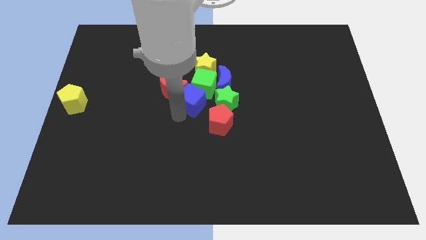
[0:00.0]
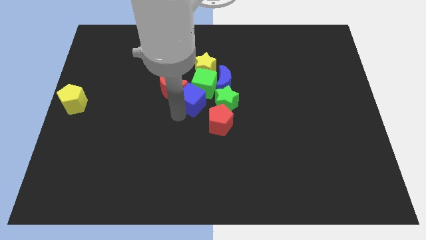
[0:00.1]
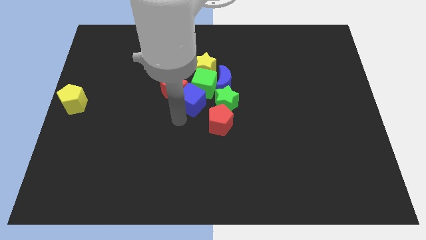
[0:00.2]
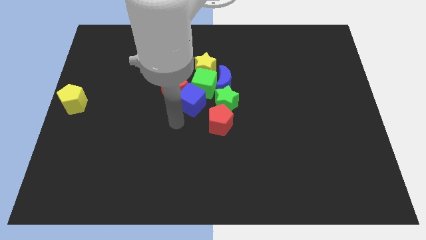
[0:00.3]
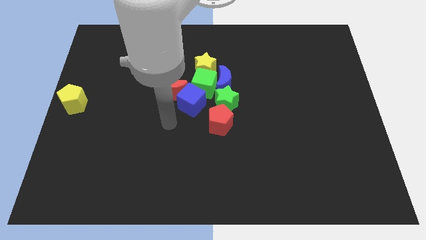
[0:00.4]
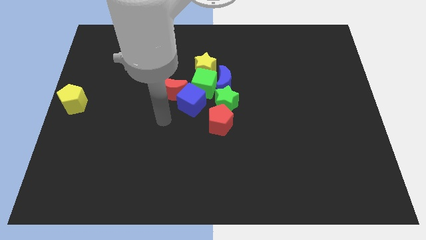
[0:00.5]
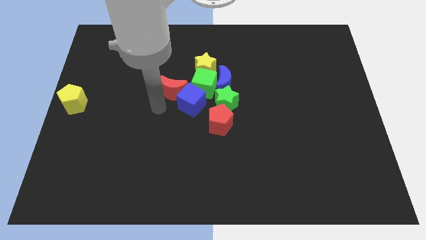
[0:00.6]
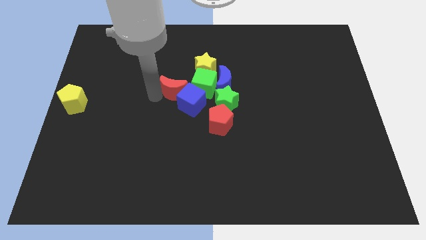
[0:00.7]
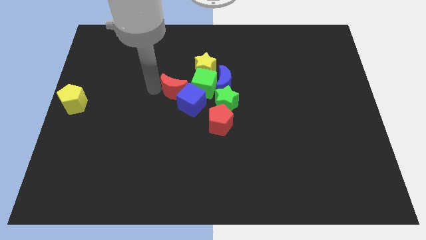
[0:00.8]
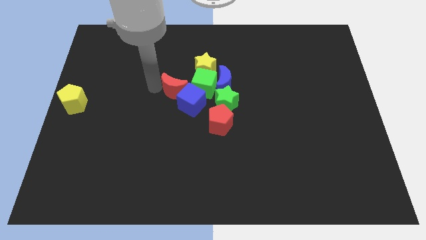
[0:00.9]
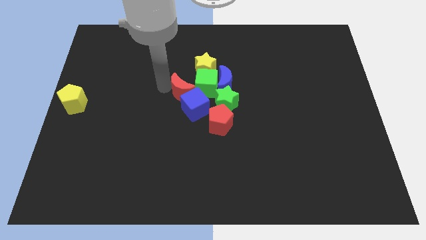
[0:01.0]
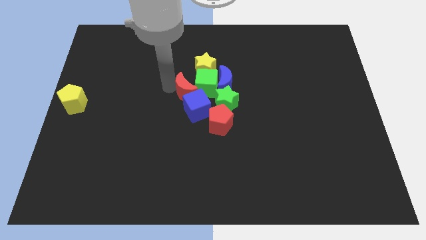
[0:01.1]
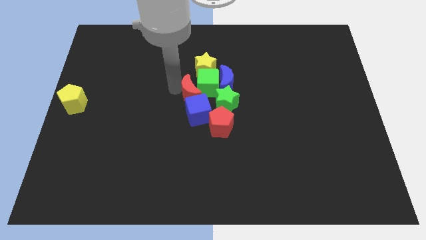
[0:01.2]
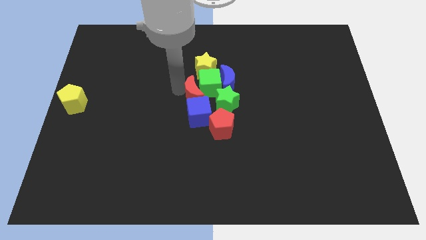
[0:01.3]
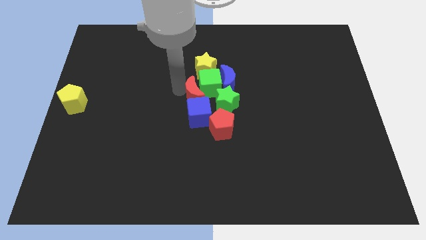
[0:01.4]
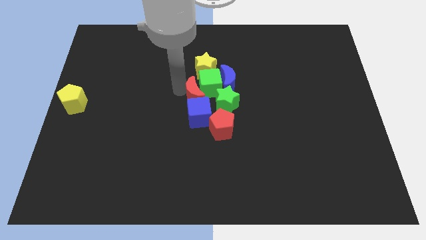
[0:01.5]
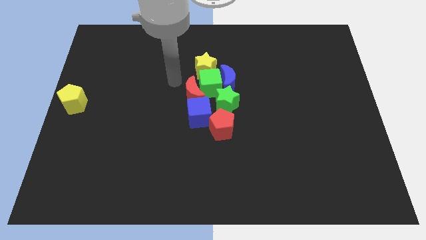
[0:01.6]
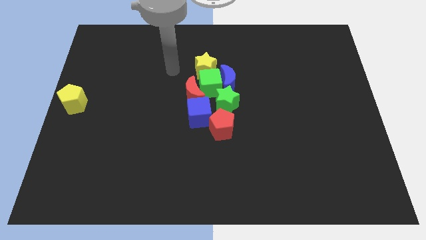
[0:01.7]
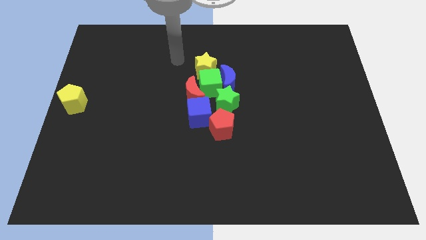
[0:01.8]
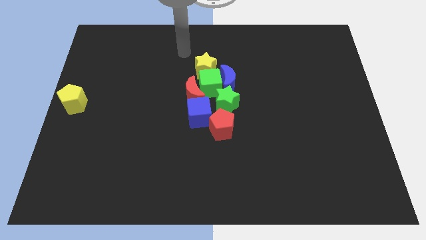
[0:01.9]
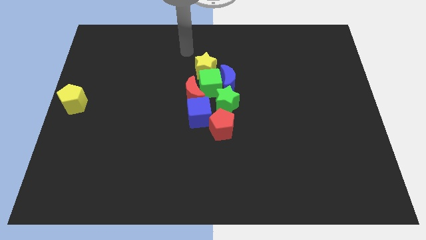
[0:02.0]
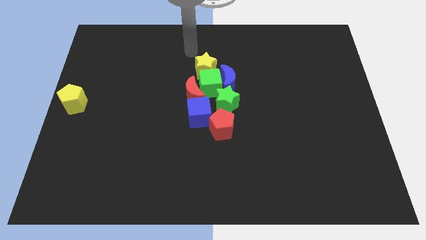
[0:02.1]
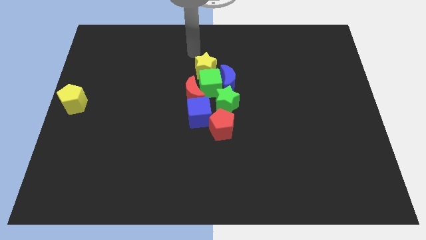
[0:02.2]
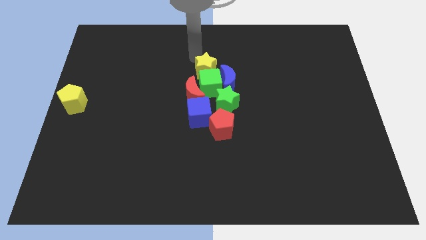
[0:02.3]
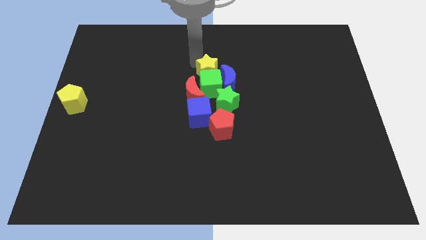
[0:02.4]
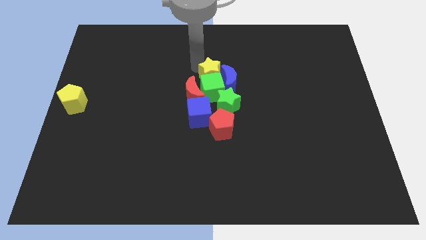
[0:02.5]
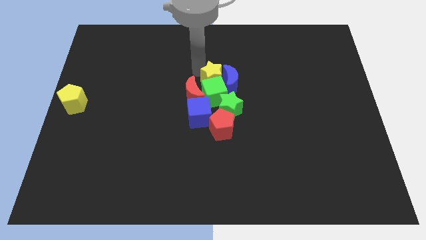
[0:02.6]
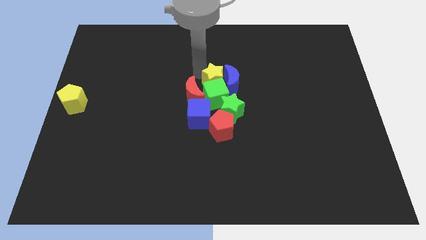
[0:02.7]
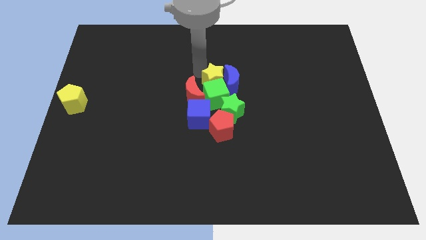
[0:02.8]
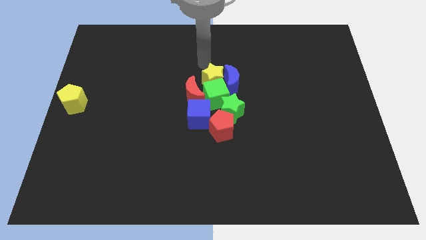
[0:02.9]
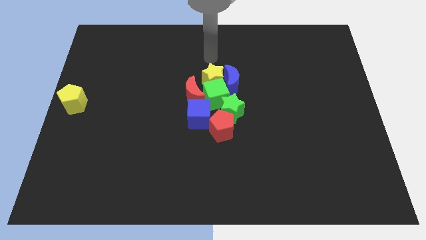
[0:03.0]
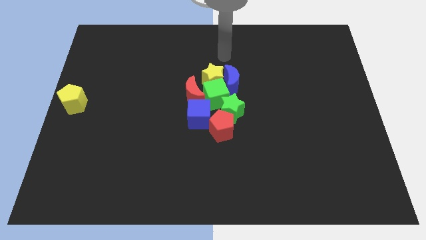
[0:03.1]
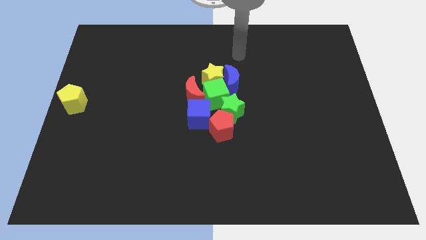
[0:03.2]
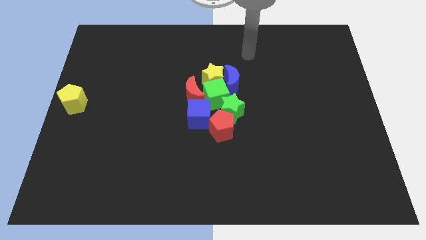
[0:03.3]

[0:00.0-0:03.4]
adjust the blue cube red crescent and yellow star into the group of blocks

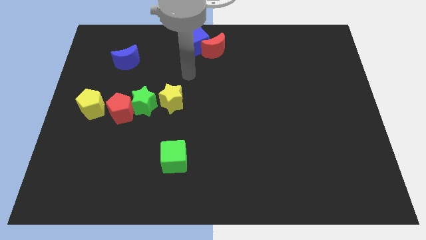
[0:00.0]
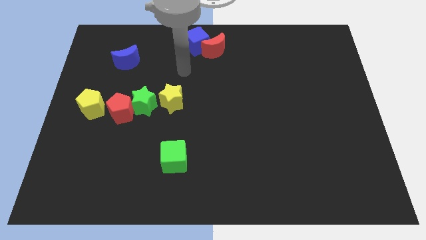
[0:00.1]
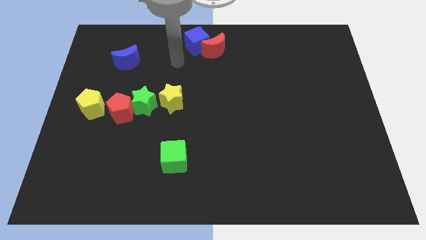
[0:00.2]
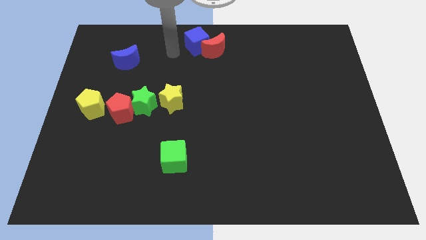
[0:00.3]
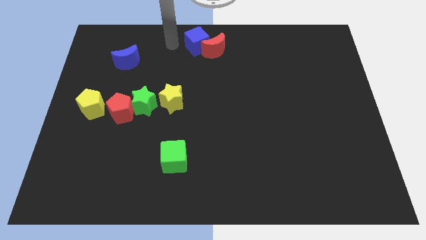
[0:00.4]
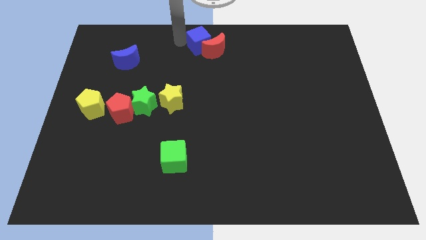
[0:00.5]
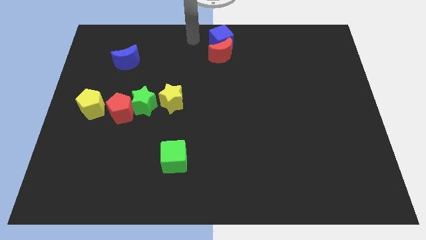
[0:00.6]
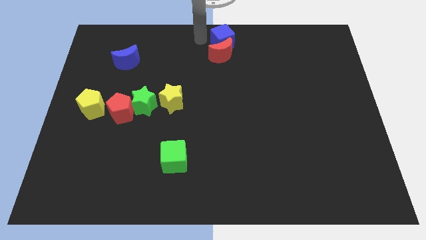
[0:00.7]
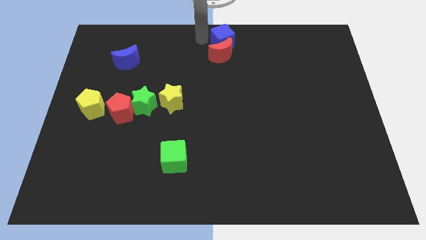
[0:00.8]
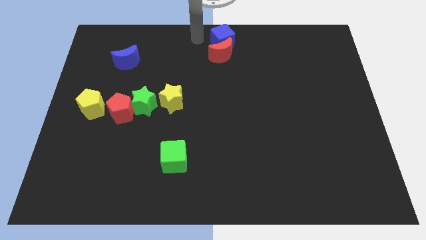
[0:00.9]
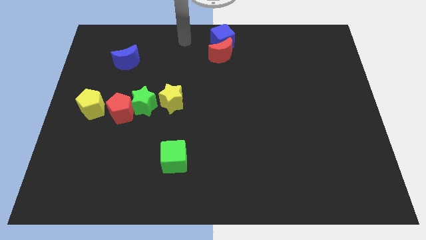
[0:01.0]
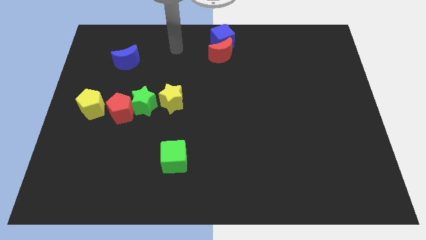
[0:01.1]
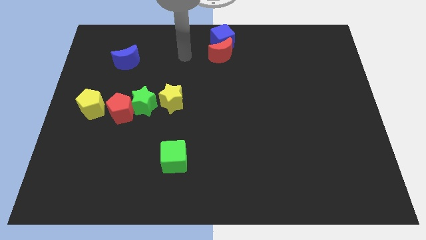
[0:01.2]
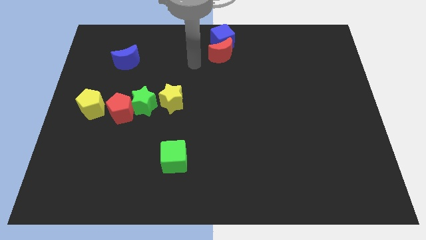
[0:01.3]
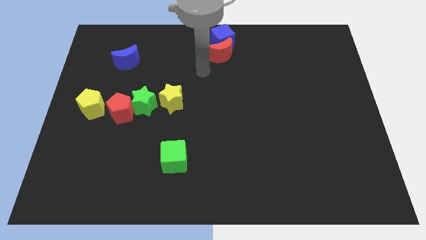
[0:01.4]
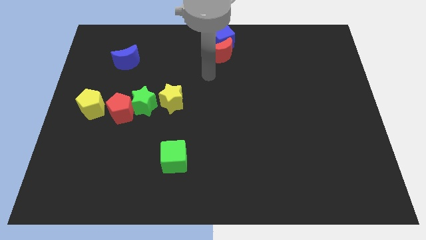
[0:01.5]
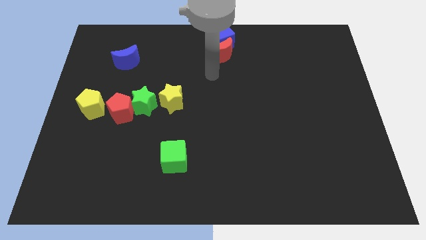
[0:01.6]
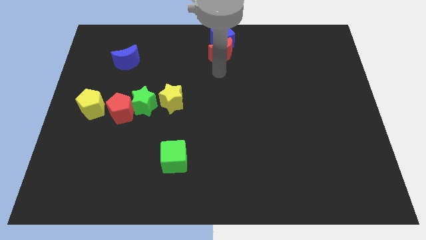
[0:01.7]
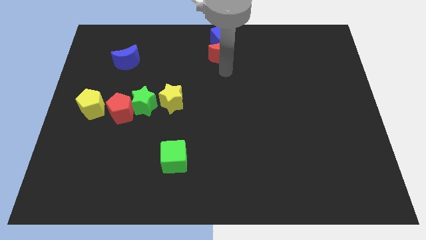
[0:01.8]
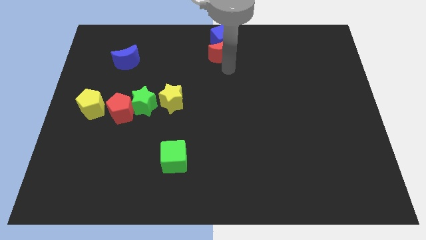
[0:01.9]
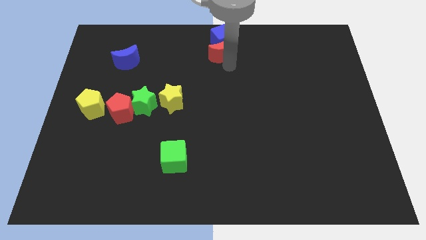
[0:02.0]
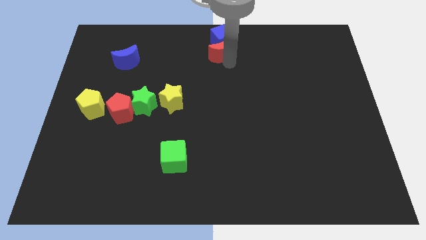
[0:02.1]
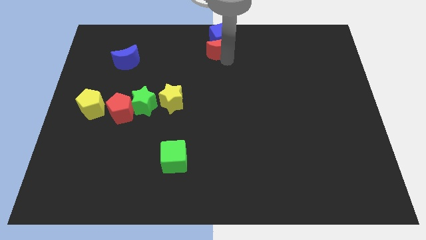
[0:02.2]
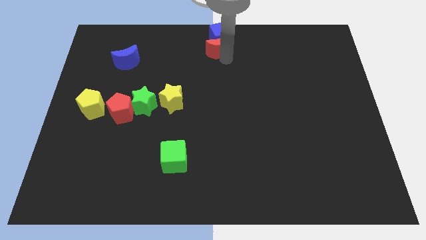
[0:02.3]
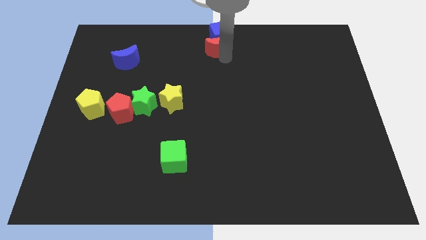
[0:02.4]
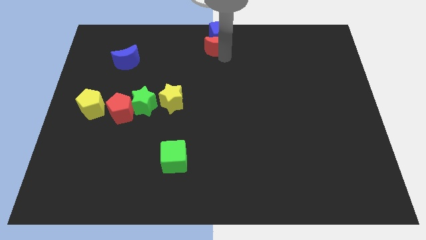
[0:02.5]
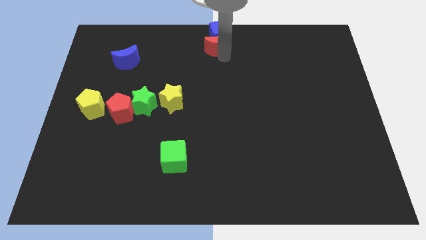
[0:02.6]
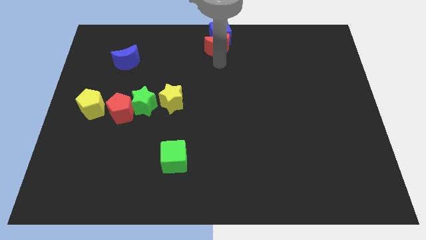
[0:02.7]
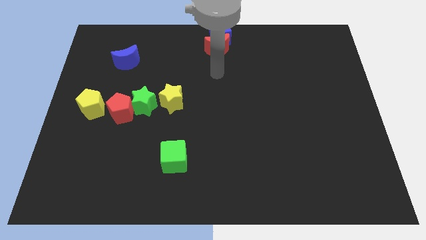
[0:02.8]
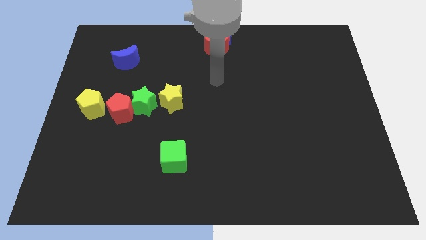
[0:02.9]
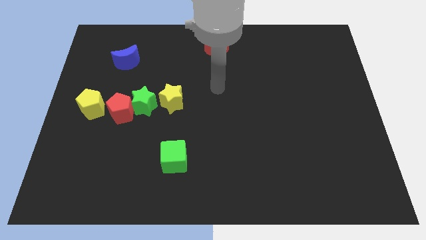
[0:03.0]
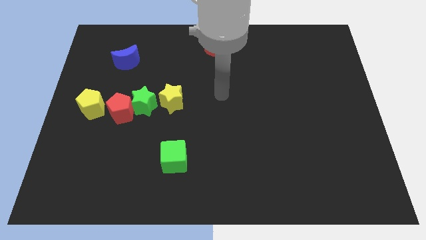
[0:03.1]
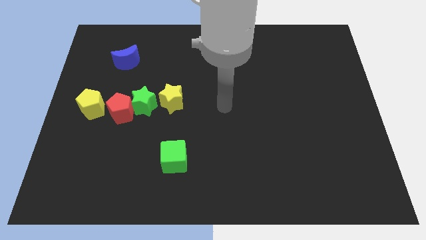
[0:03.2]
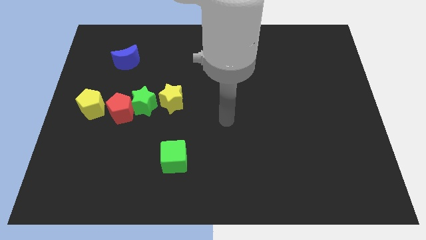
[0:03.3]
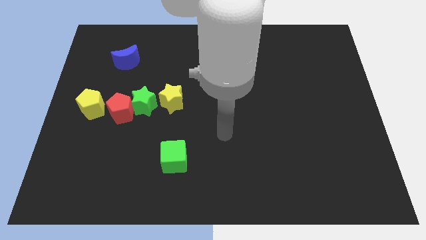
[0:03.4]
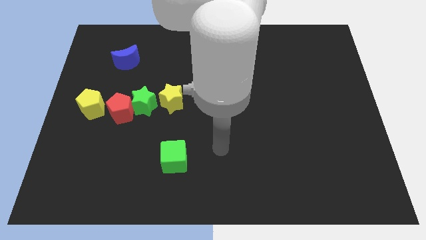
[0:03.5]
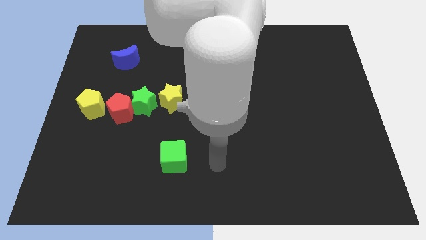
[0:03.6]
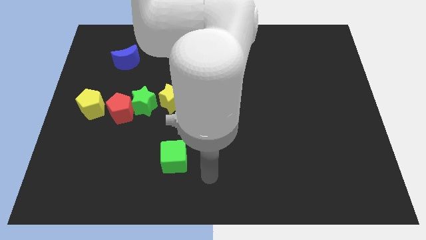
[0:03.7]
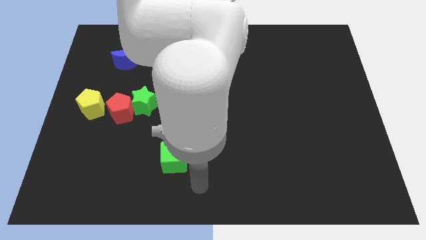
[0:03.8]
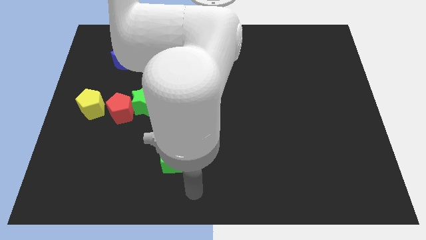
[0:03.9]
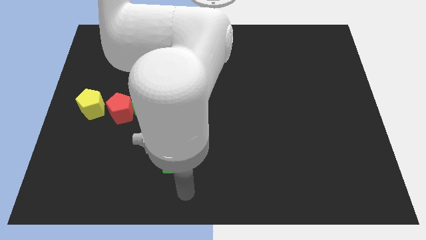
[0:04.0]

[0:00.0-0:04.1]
move red crescent along with blue block to the top center of the board

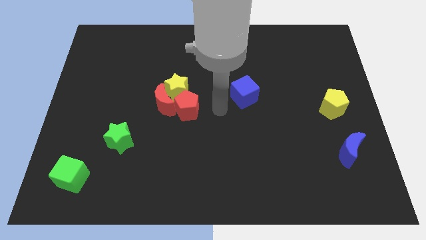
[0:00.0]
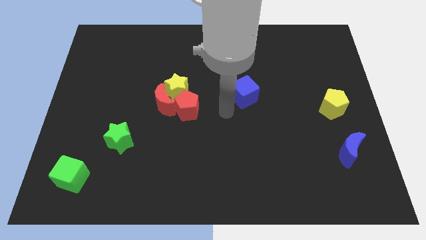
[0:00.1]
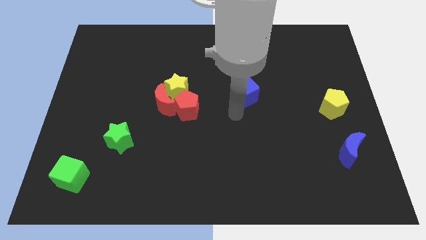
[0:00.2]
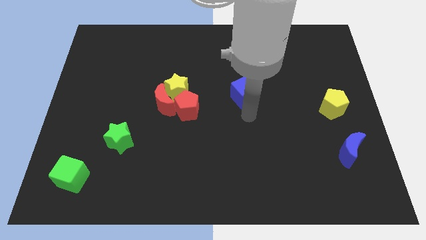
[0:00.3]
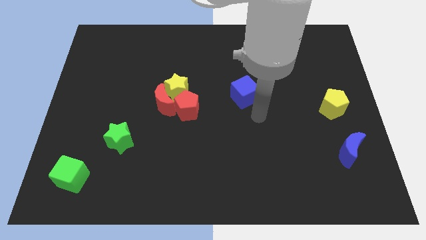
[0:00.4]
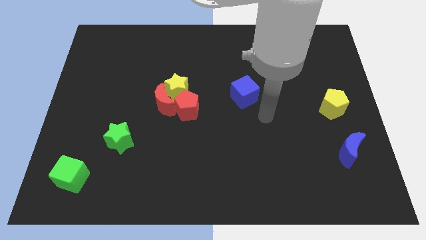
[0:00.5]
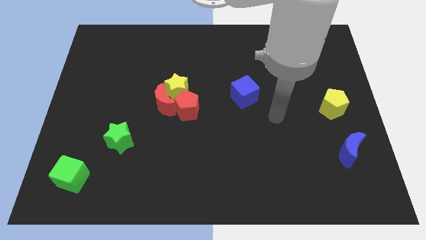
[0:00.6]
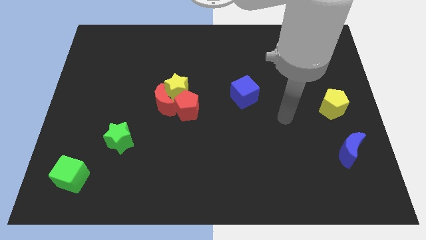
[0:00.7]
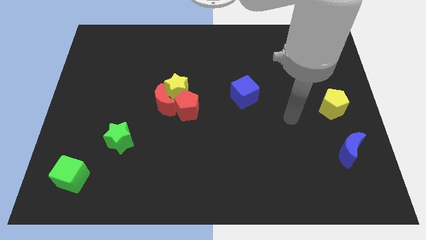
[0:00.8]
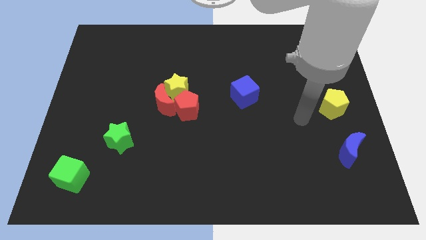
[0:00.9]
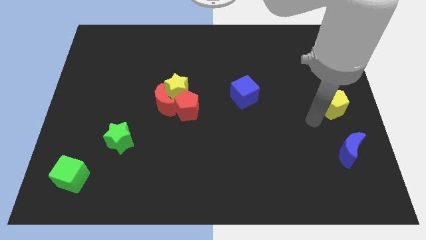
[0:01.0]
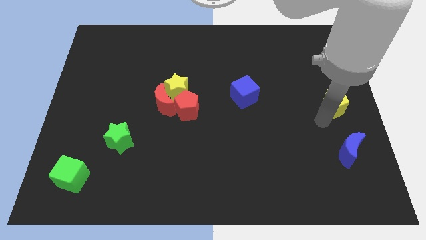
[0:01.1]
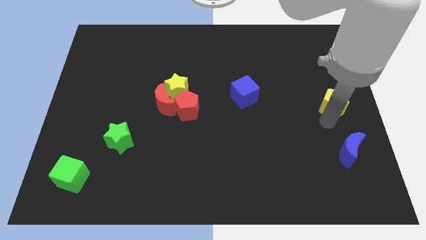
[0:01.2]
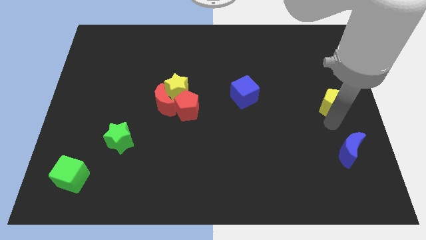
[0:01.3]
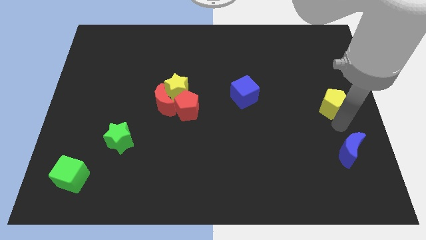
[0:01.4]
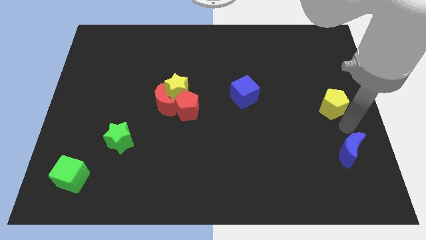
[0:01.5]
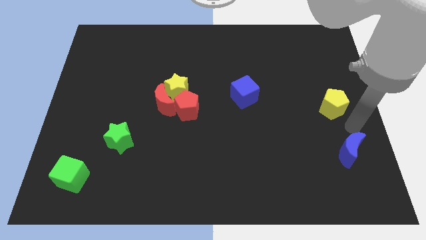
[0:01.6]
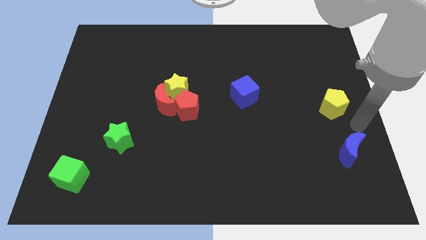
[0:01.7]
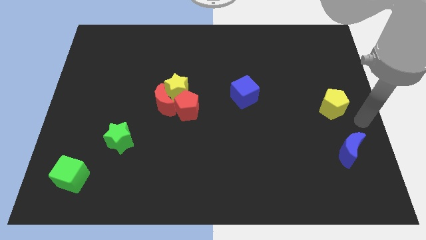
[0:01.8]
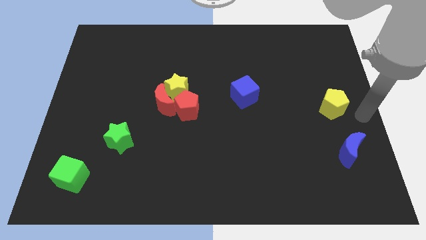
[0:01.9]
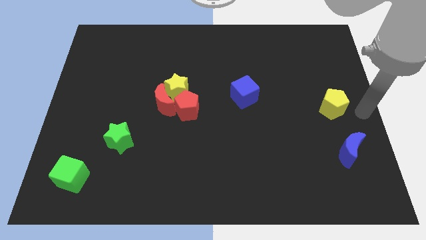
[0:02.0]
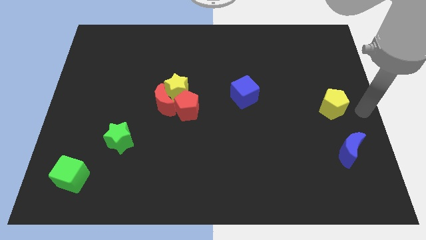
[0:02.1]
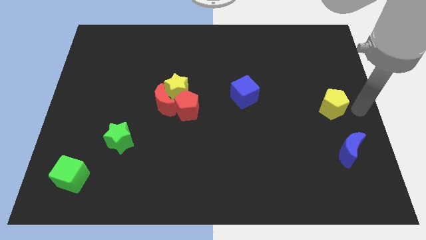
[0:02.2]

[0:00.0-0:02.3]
point your arm to the right of yellow pentagon
